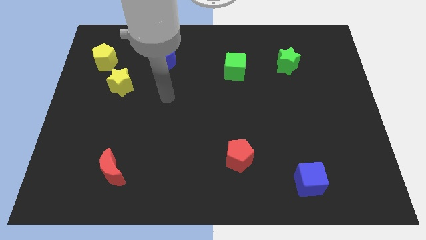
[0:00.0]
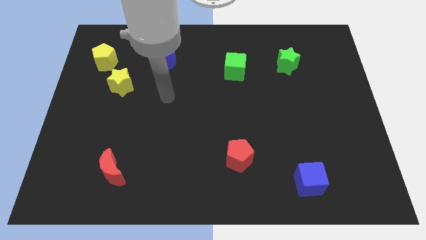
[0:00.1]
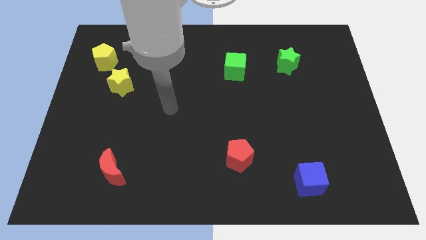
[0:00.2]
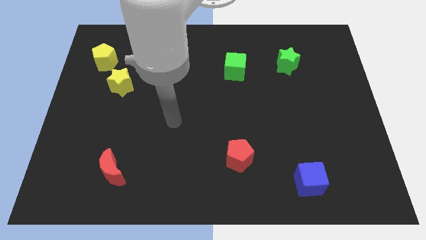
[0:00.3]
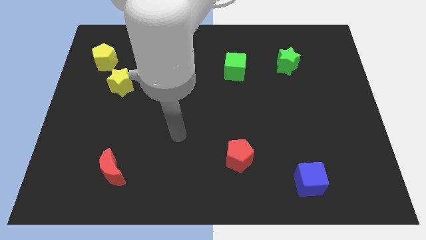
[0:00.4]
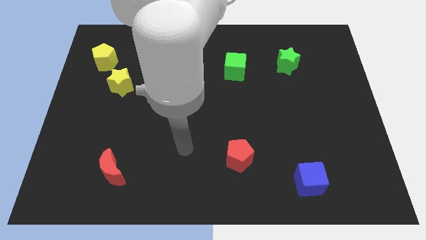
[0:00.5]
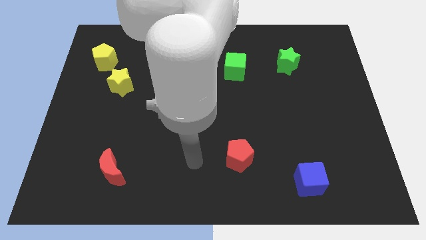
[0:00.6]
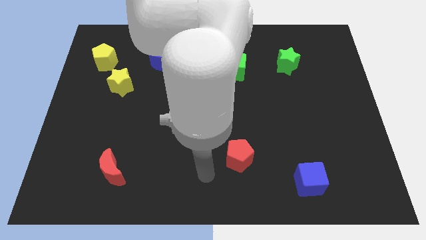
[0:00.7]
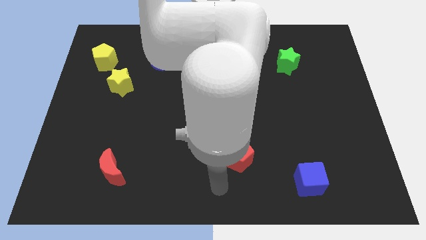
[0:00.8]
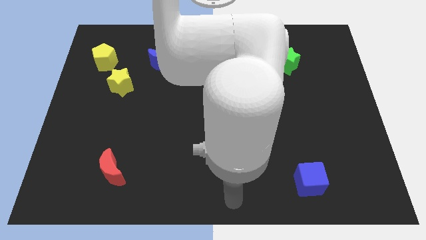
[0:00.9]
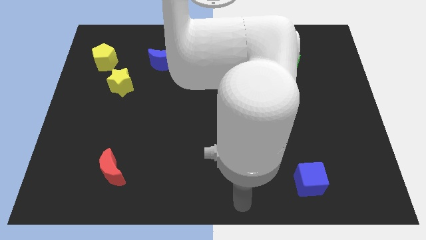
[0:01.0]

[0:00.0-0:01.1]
move the arm to the bottom center of the board

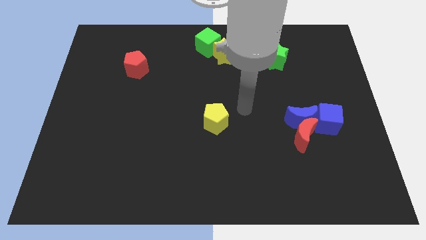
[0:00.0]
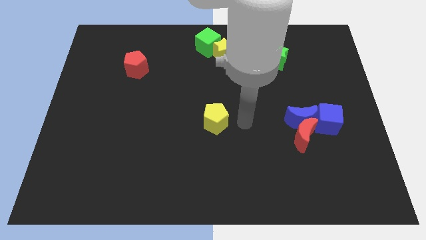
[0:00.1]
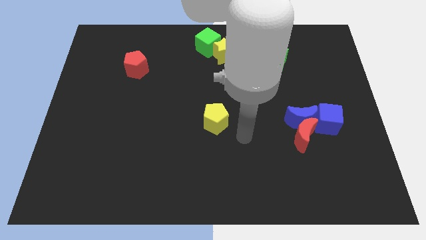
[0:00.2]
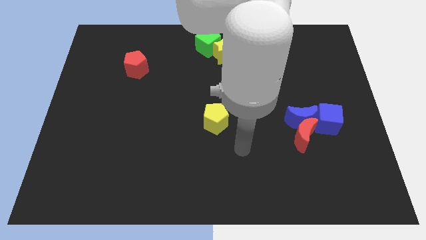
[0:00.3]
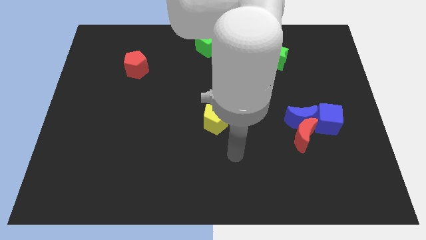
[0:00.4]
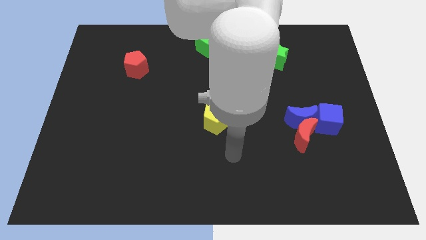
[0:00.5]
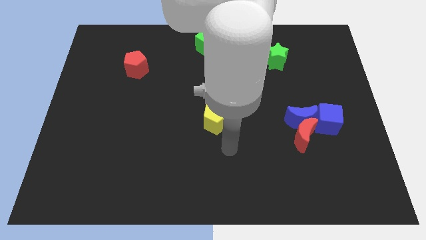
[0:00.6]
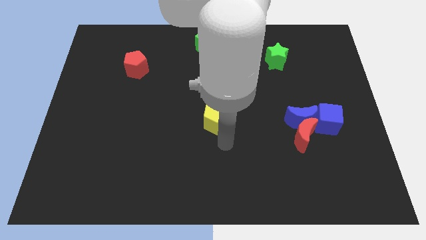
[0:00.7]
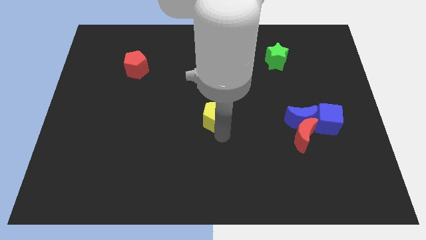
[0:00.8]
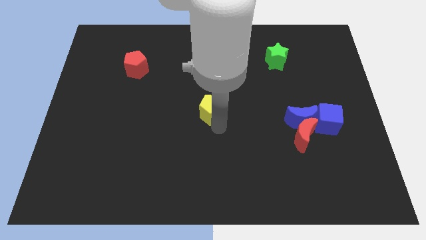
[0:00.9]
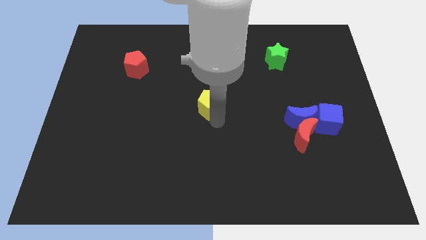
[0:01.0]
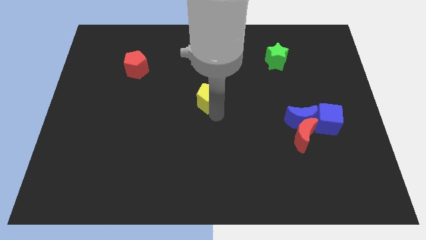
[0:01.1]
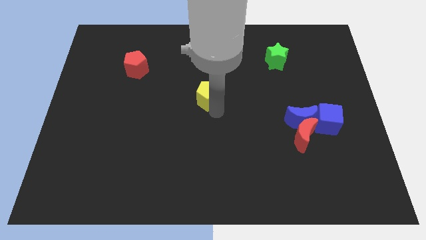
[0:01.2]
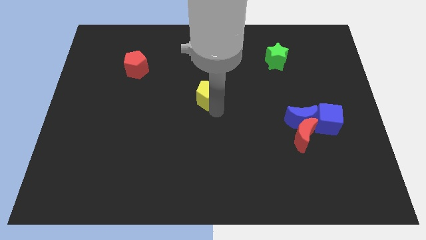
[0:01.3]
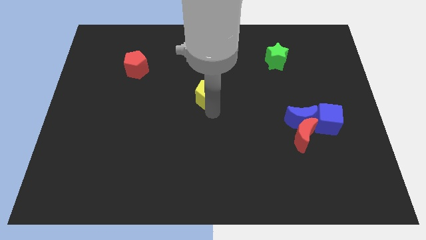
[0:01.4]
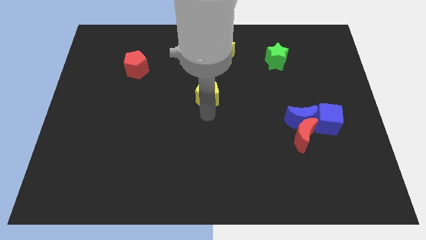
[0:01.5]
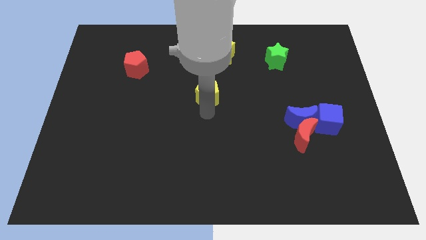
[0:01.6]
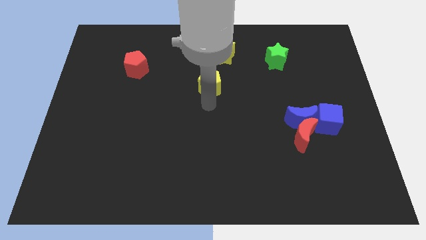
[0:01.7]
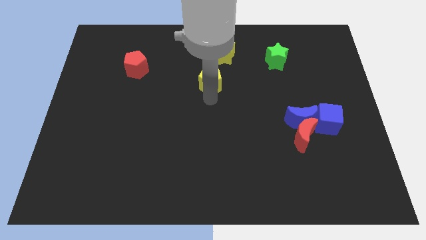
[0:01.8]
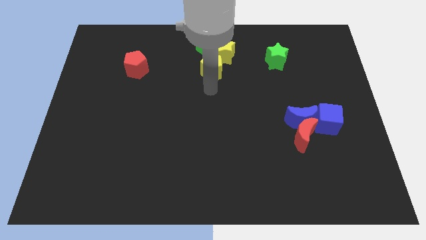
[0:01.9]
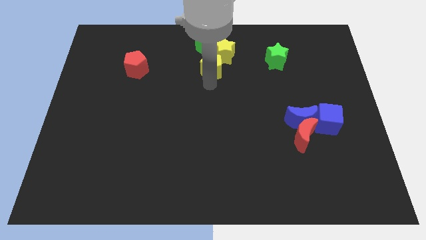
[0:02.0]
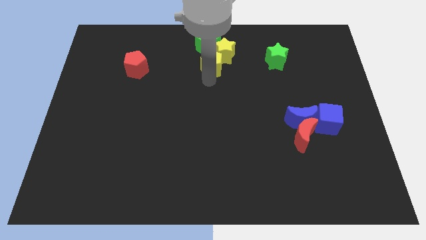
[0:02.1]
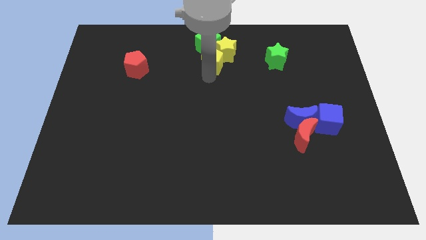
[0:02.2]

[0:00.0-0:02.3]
slide the yellow pentagon into the yellow star at the top side of the board

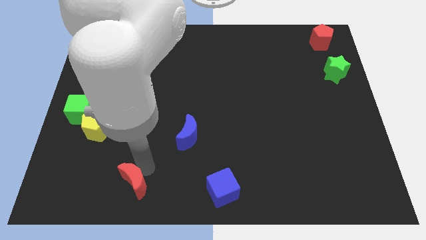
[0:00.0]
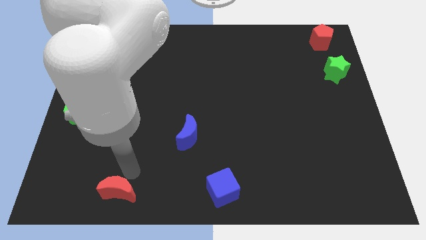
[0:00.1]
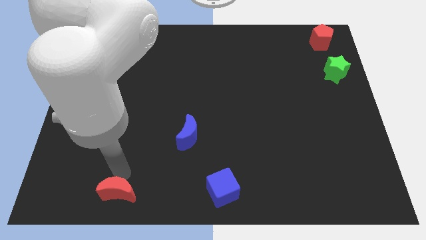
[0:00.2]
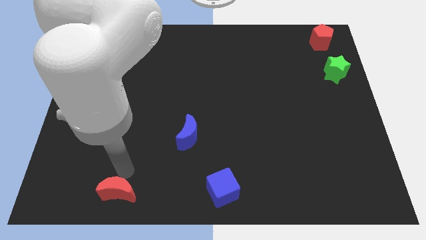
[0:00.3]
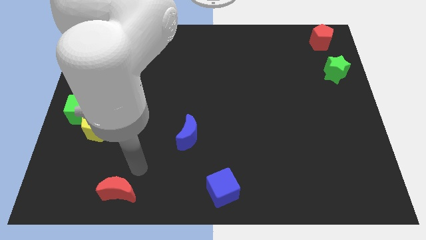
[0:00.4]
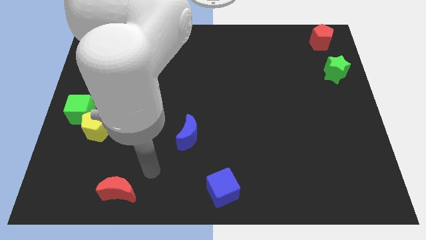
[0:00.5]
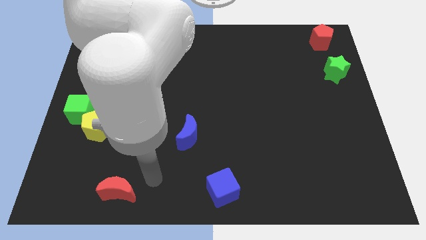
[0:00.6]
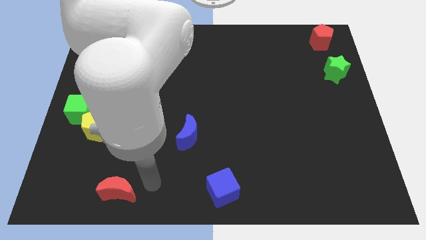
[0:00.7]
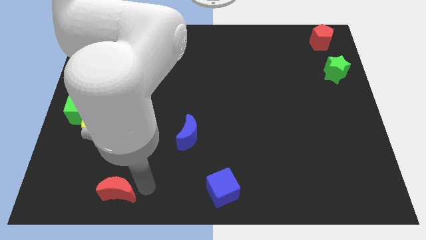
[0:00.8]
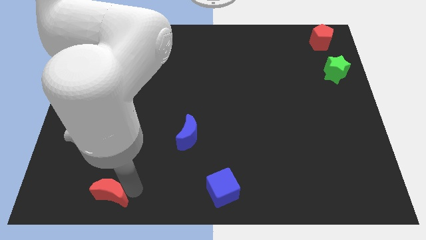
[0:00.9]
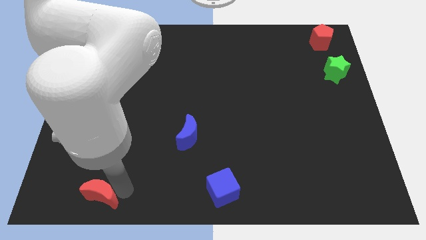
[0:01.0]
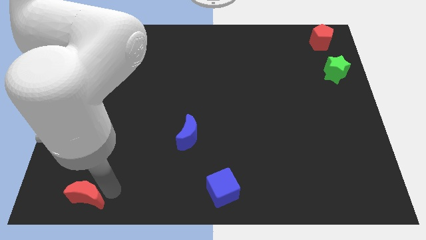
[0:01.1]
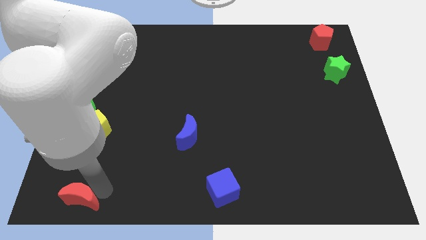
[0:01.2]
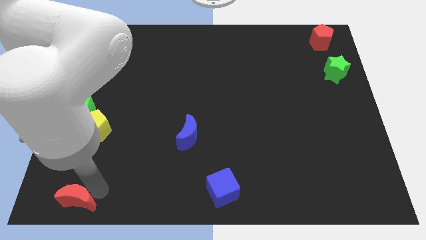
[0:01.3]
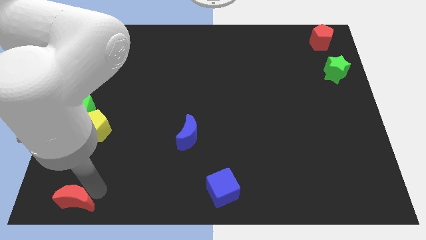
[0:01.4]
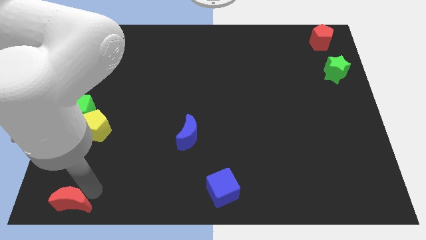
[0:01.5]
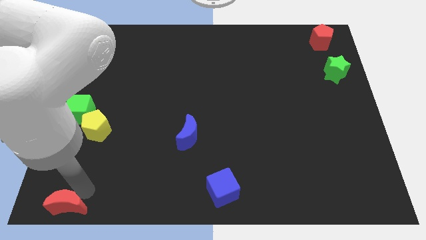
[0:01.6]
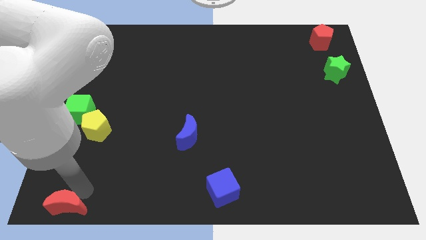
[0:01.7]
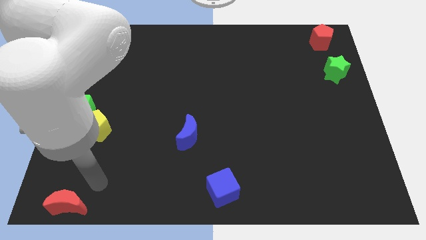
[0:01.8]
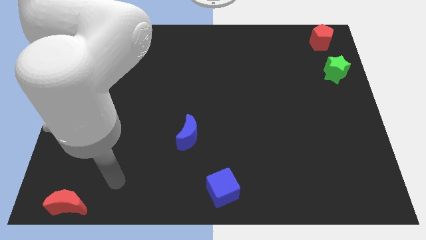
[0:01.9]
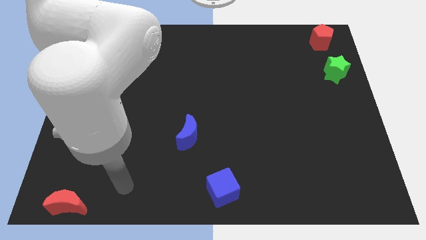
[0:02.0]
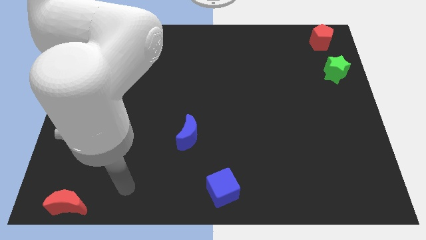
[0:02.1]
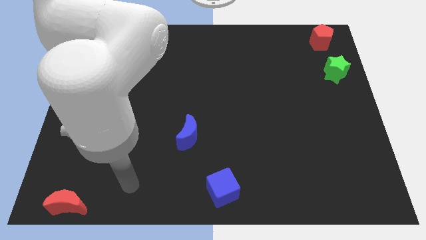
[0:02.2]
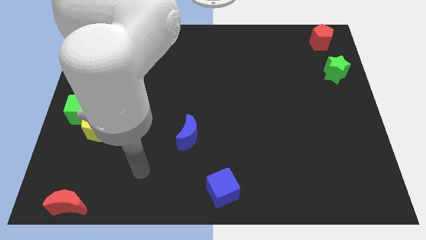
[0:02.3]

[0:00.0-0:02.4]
push the red crescent to the bottom left corner

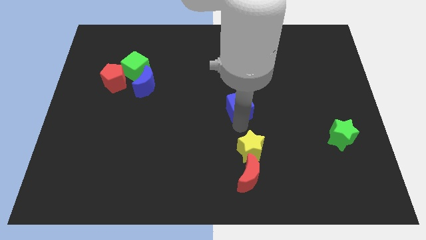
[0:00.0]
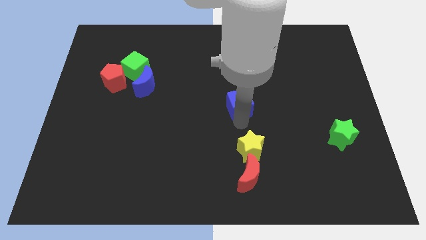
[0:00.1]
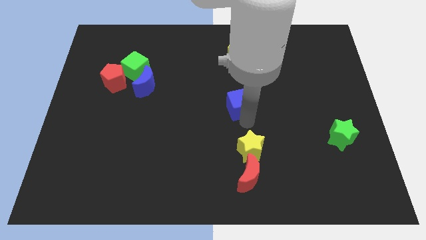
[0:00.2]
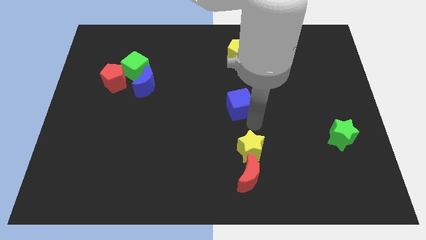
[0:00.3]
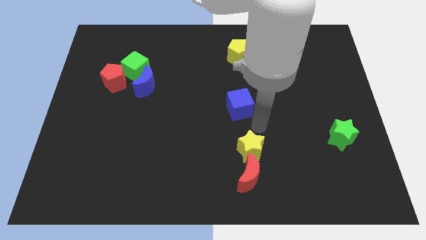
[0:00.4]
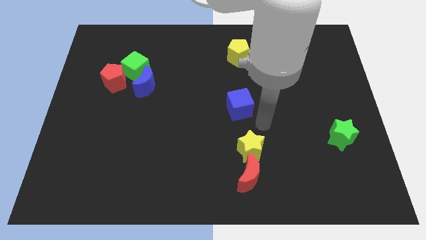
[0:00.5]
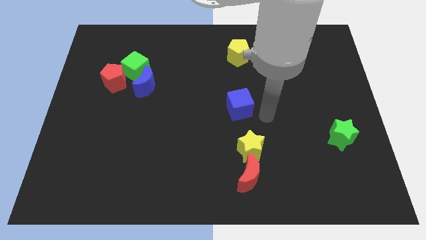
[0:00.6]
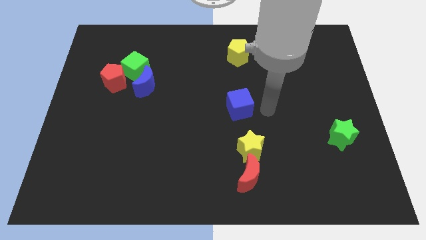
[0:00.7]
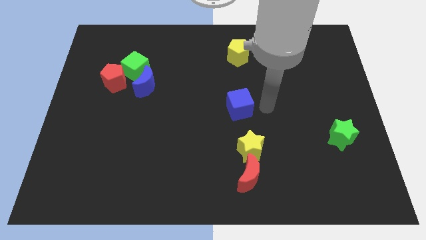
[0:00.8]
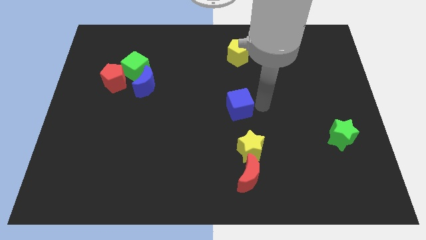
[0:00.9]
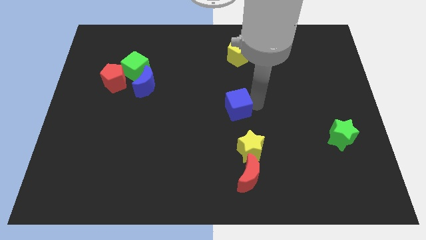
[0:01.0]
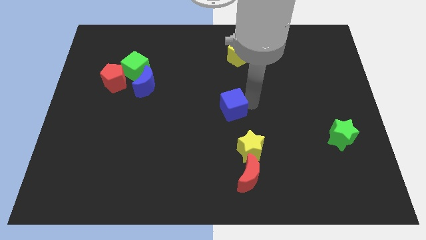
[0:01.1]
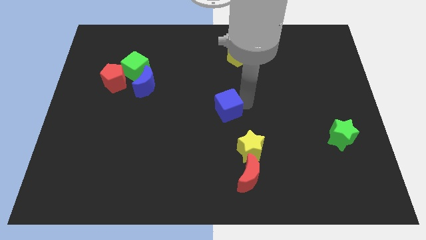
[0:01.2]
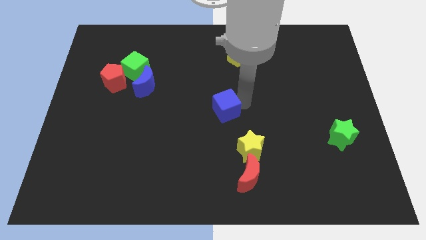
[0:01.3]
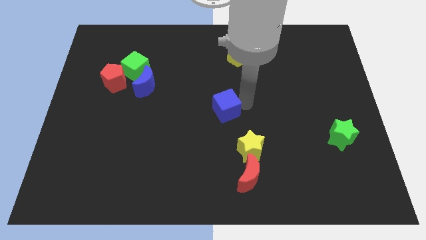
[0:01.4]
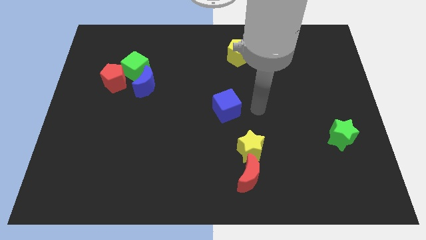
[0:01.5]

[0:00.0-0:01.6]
push the blue cube slightly to the left

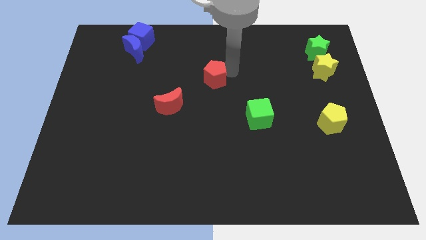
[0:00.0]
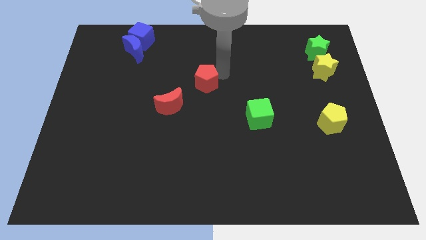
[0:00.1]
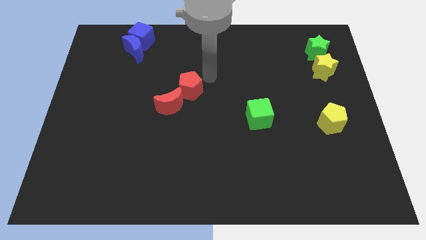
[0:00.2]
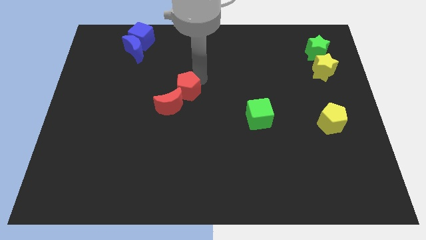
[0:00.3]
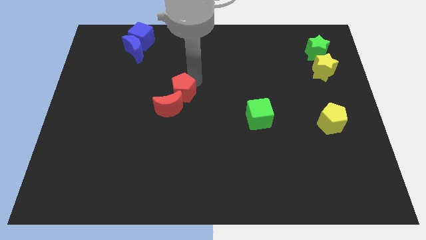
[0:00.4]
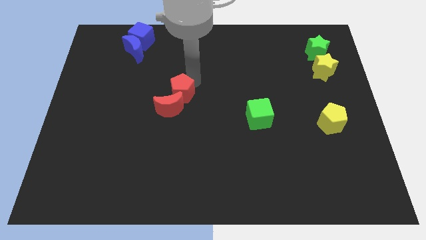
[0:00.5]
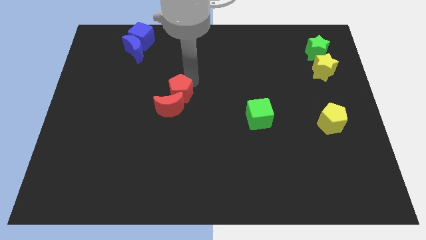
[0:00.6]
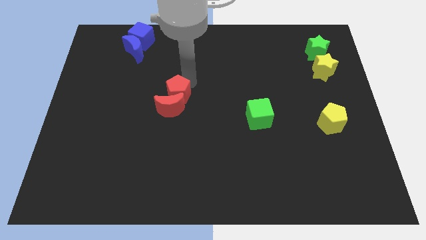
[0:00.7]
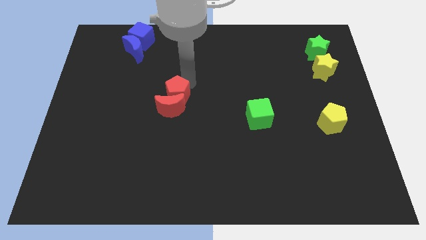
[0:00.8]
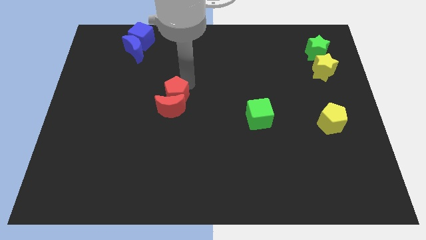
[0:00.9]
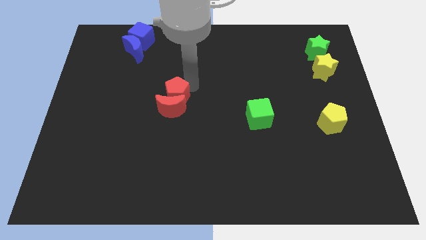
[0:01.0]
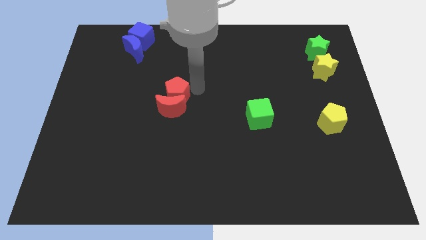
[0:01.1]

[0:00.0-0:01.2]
place the red pentagon at top of the red moon

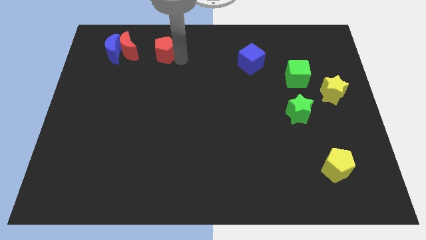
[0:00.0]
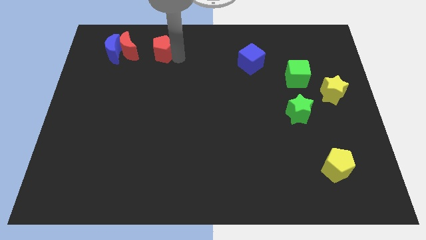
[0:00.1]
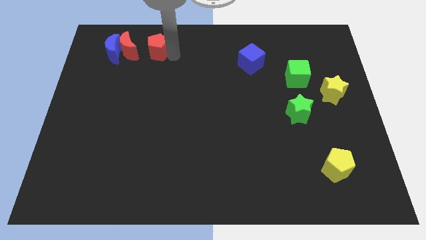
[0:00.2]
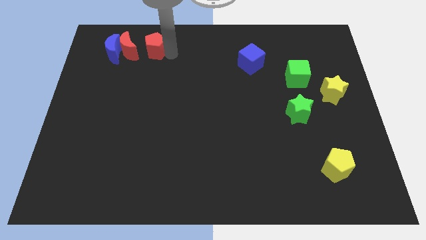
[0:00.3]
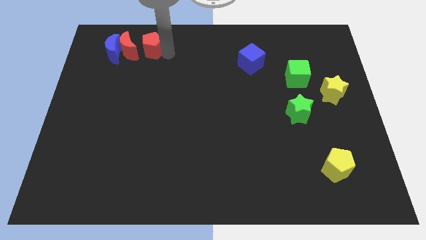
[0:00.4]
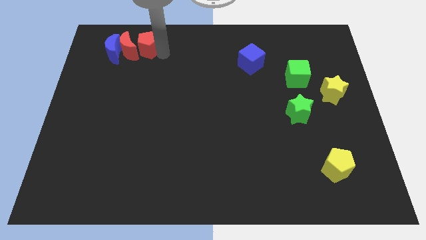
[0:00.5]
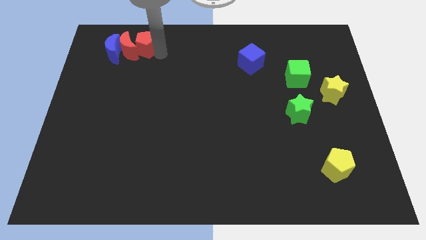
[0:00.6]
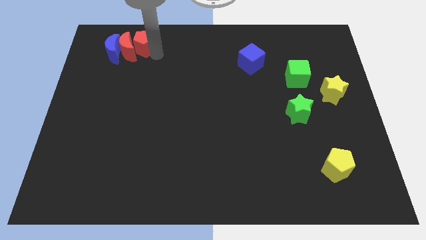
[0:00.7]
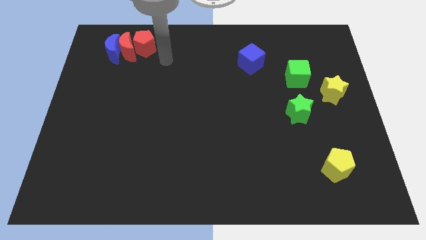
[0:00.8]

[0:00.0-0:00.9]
push red pentagon in to red moon
